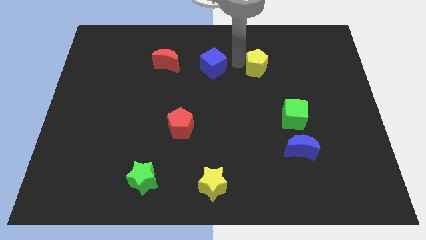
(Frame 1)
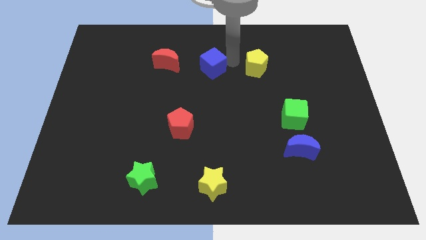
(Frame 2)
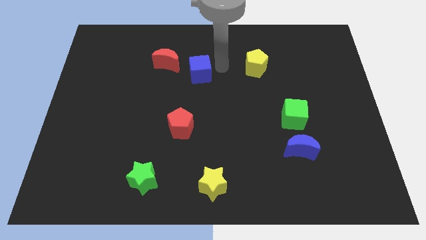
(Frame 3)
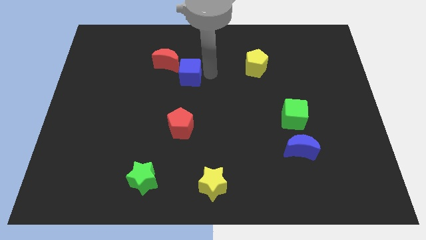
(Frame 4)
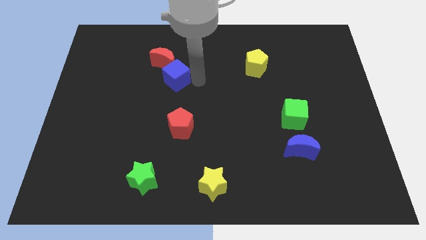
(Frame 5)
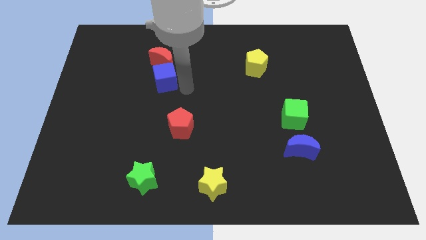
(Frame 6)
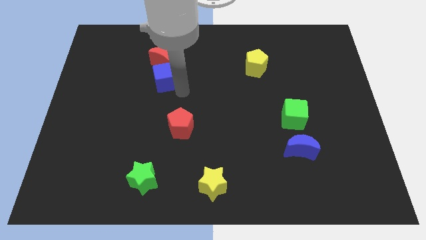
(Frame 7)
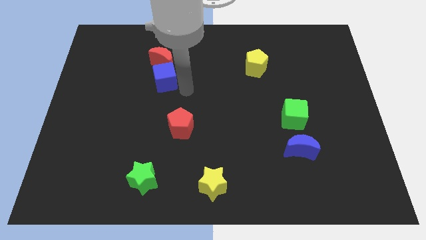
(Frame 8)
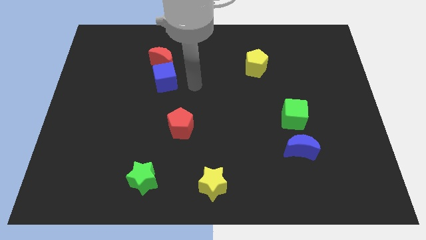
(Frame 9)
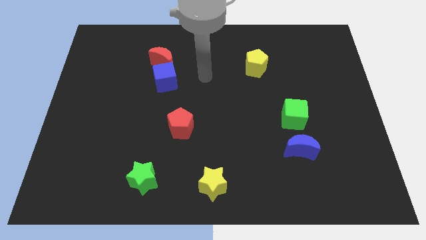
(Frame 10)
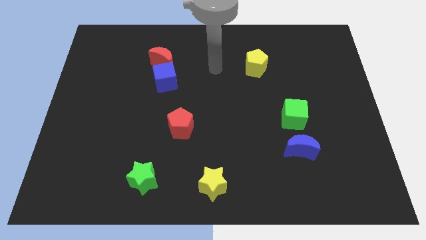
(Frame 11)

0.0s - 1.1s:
put the blue cube below the red crescent

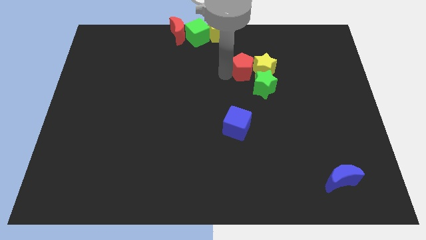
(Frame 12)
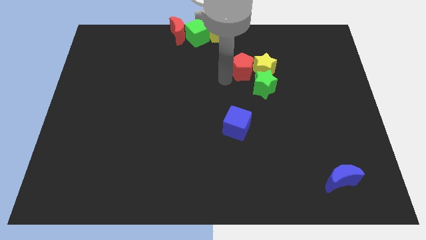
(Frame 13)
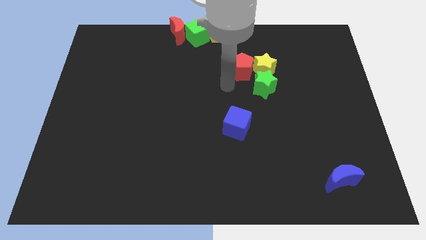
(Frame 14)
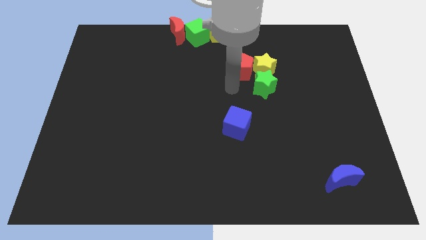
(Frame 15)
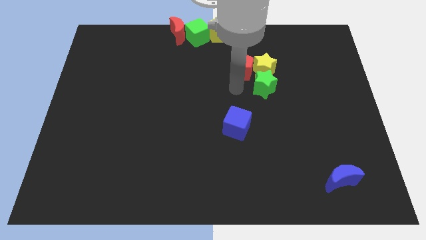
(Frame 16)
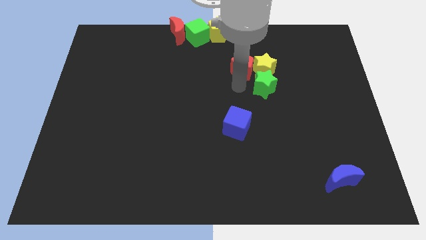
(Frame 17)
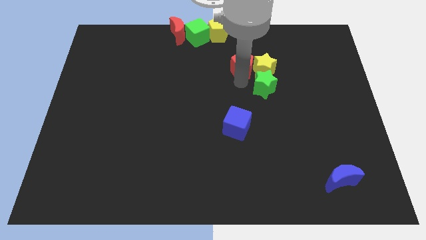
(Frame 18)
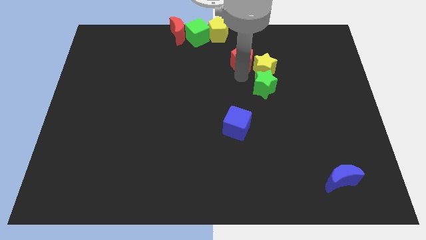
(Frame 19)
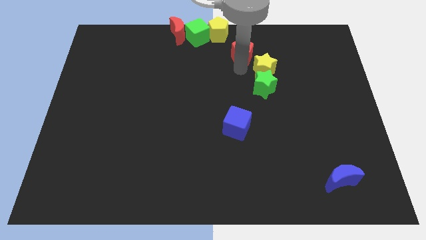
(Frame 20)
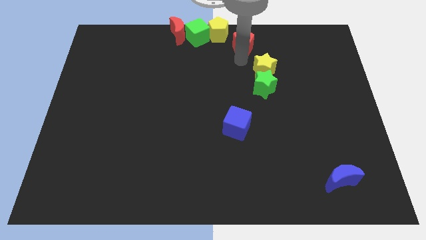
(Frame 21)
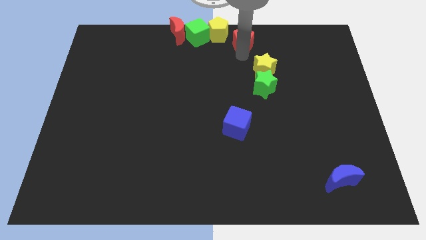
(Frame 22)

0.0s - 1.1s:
separate the red pentagon from the yellow star

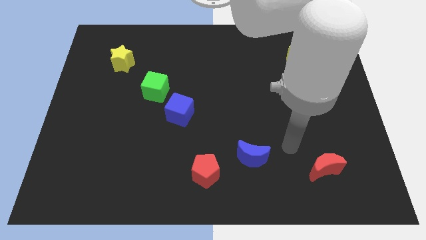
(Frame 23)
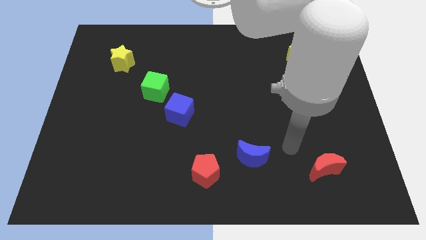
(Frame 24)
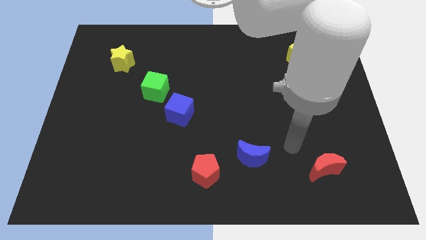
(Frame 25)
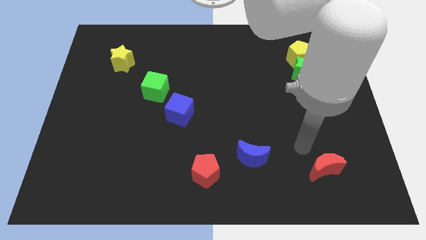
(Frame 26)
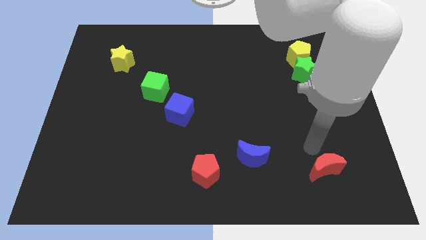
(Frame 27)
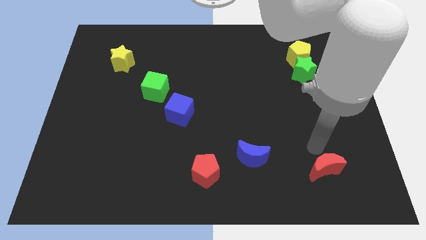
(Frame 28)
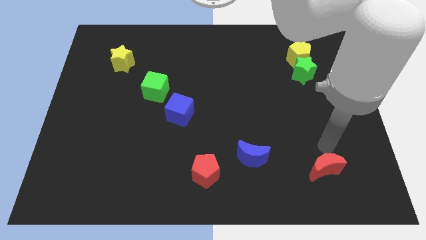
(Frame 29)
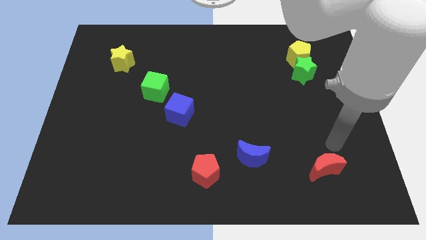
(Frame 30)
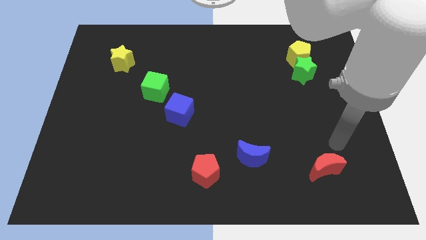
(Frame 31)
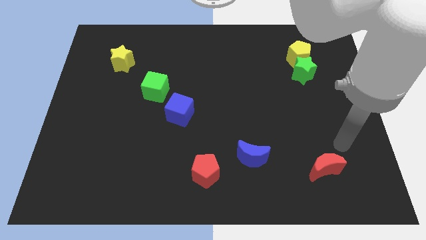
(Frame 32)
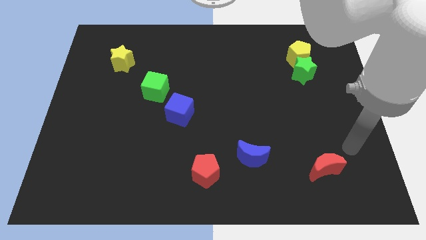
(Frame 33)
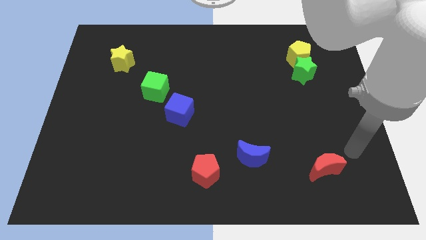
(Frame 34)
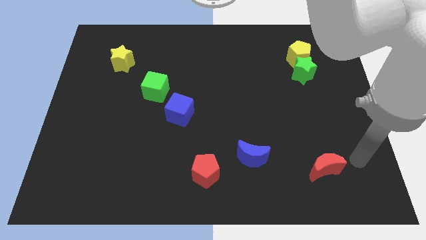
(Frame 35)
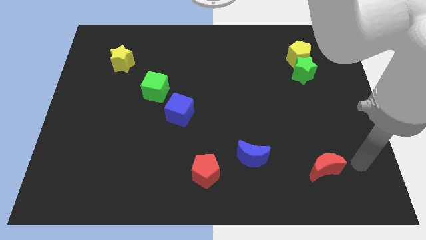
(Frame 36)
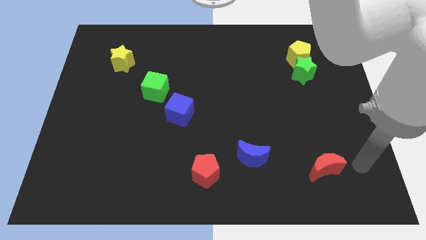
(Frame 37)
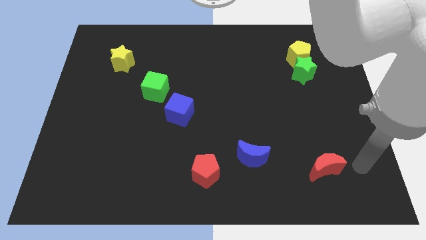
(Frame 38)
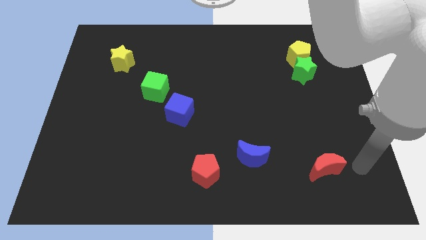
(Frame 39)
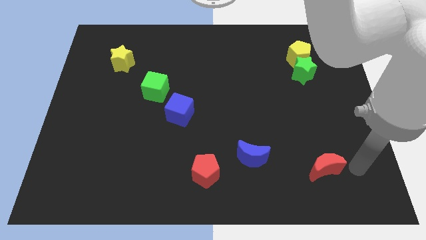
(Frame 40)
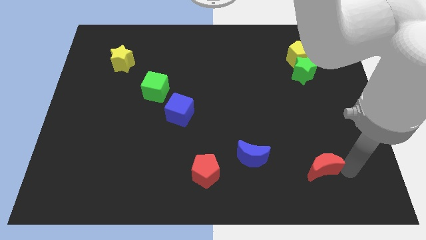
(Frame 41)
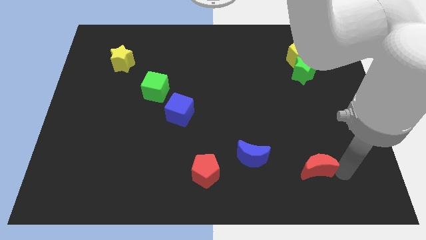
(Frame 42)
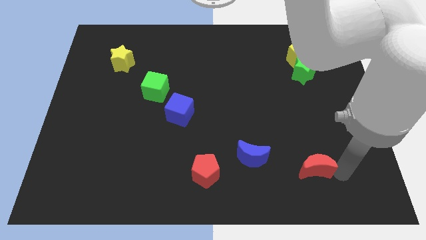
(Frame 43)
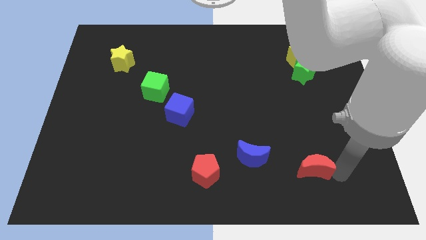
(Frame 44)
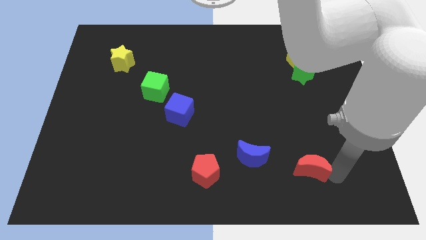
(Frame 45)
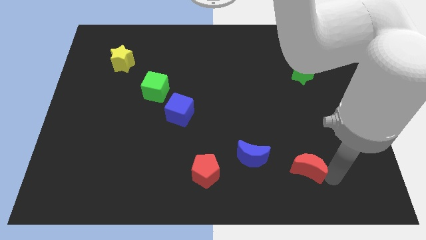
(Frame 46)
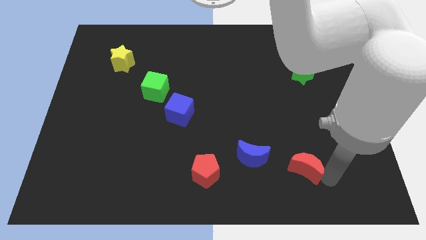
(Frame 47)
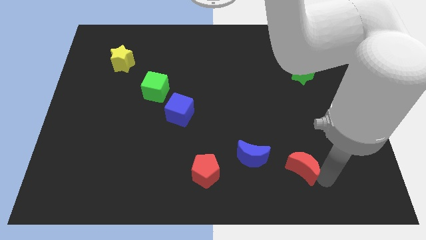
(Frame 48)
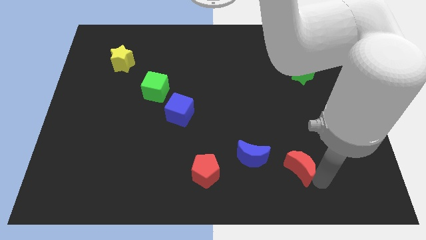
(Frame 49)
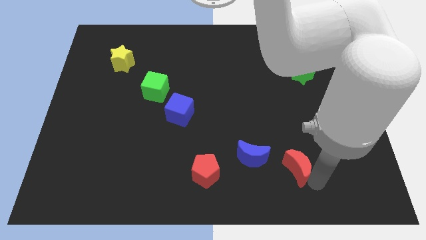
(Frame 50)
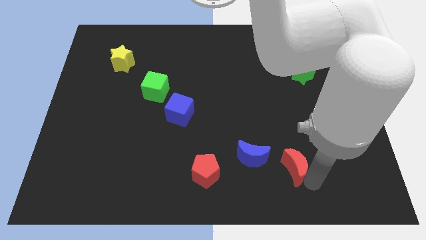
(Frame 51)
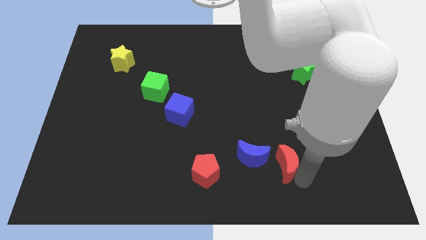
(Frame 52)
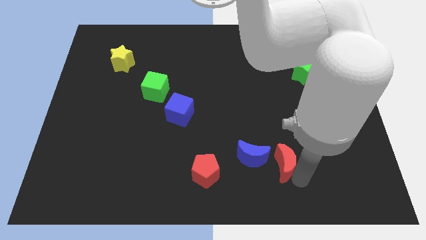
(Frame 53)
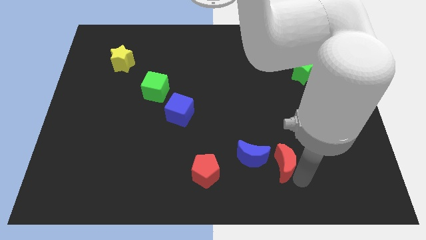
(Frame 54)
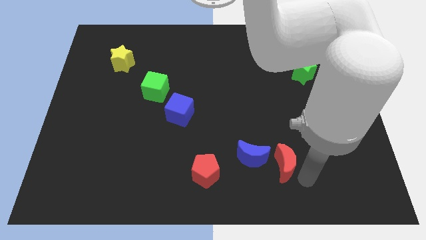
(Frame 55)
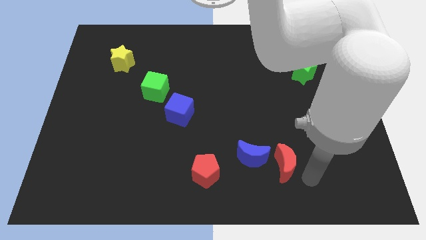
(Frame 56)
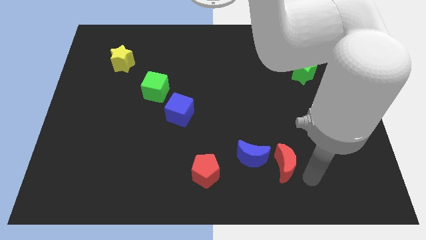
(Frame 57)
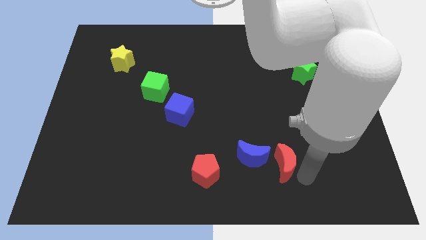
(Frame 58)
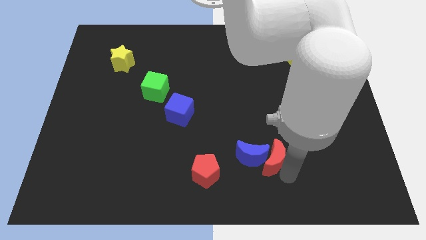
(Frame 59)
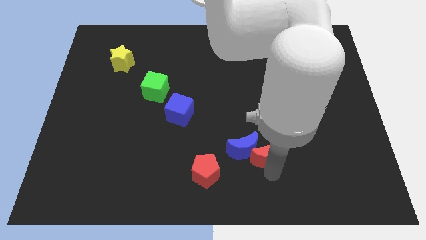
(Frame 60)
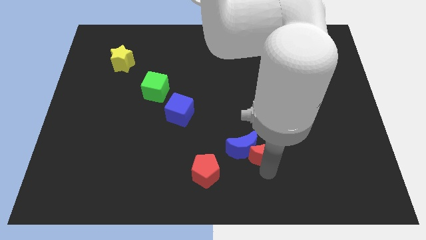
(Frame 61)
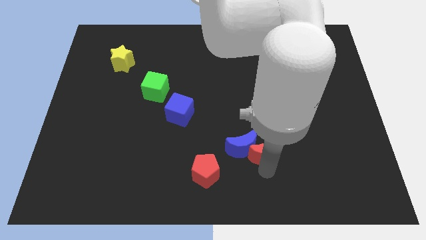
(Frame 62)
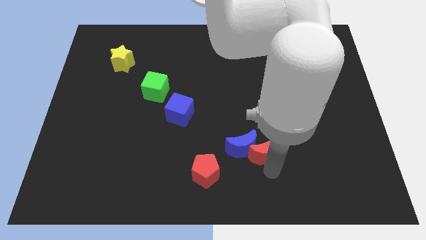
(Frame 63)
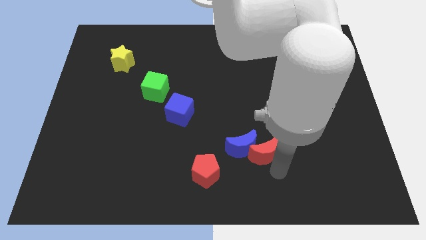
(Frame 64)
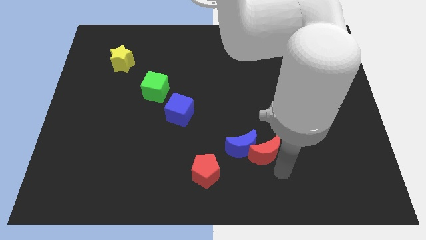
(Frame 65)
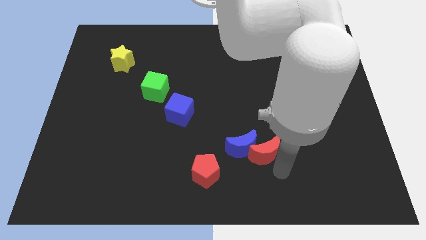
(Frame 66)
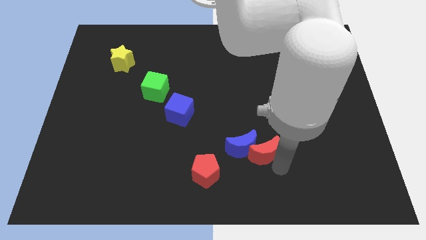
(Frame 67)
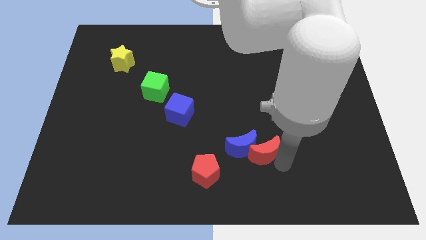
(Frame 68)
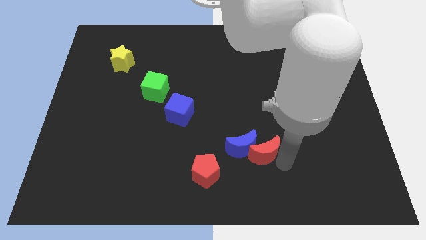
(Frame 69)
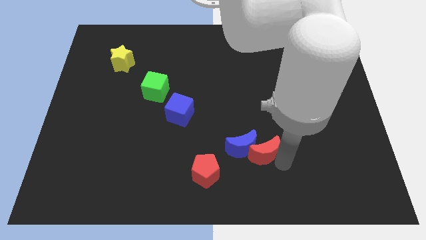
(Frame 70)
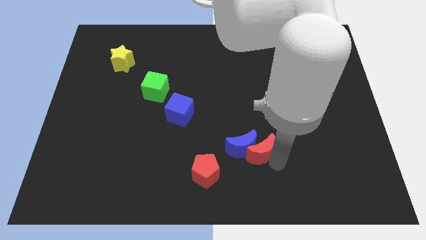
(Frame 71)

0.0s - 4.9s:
push the red crescent towards the blue crescent

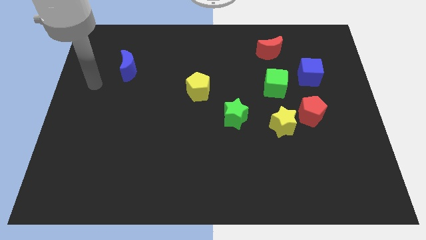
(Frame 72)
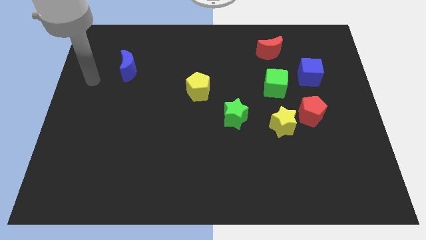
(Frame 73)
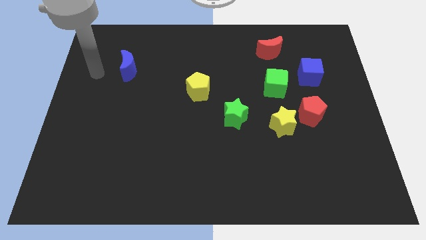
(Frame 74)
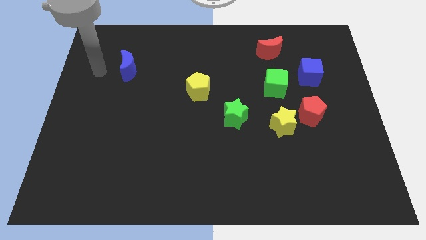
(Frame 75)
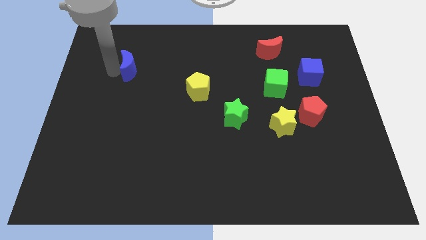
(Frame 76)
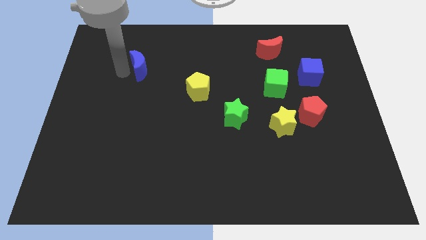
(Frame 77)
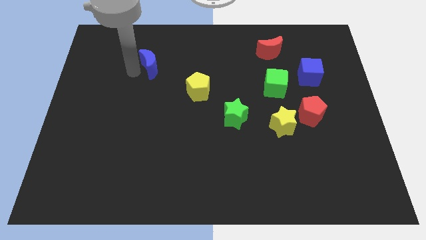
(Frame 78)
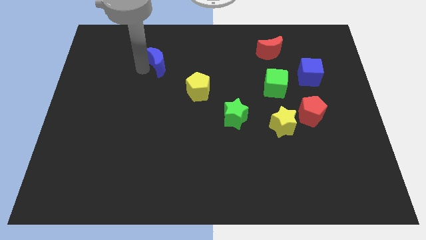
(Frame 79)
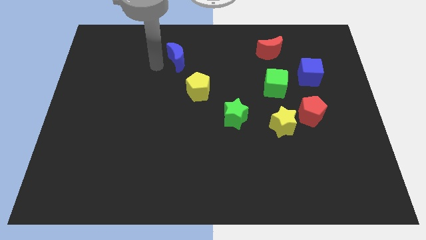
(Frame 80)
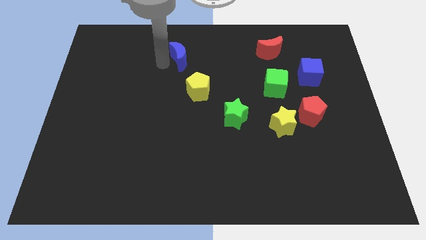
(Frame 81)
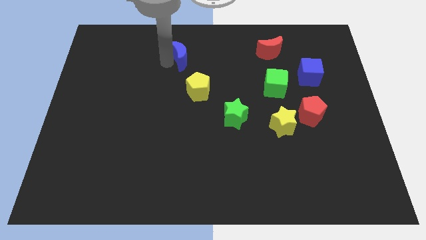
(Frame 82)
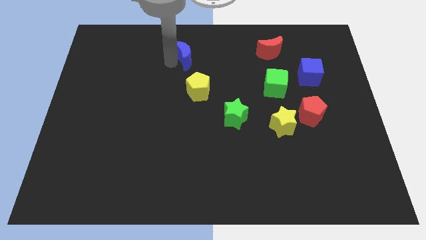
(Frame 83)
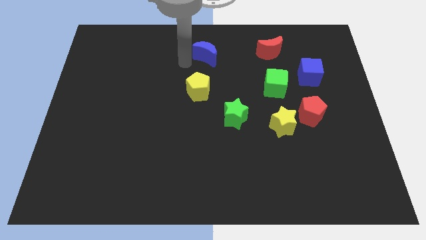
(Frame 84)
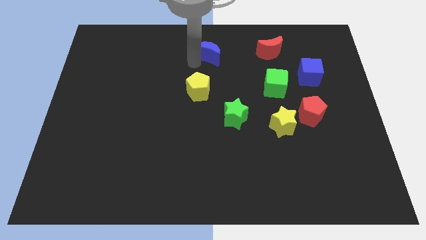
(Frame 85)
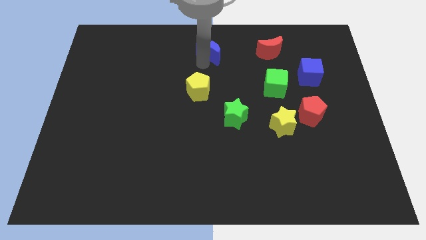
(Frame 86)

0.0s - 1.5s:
place the blue moon above the yellow pentagon

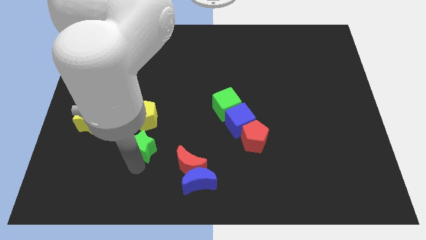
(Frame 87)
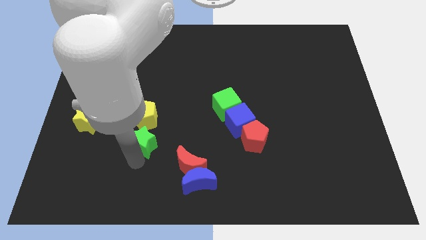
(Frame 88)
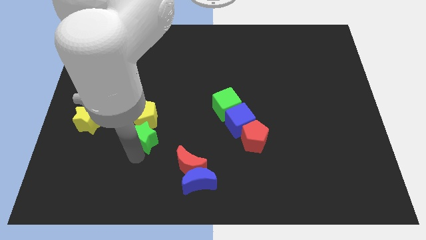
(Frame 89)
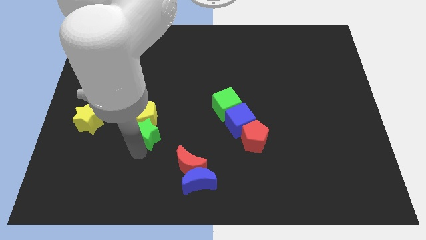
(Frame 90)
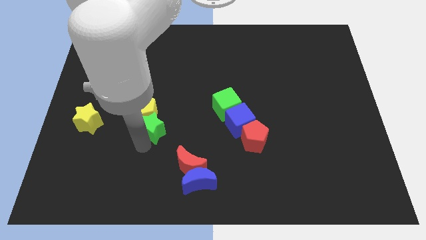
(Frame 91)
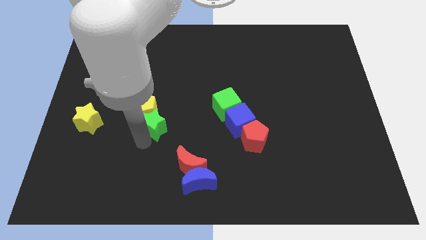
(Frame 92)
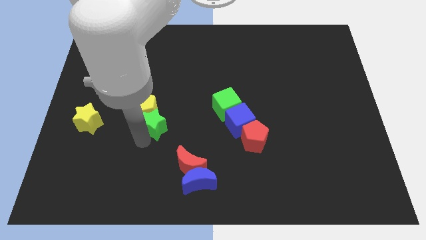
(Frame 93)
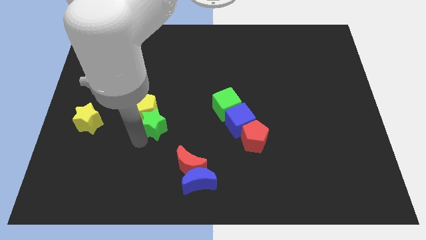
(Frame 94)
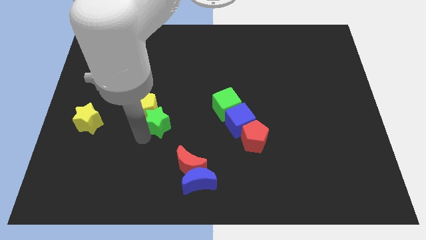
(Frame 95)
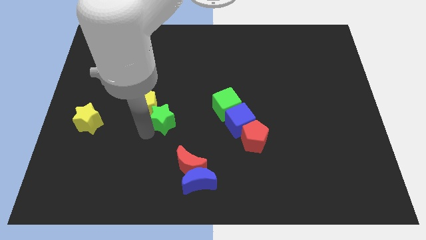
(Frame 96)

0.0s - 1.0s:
push green star into the yellw pentagon
